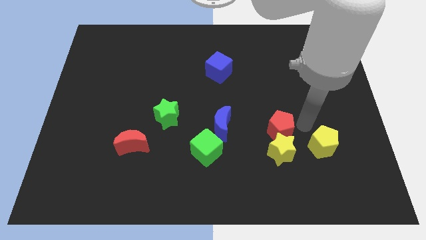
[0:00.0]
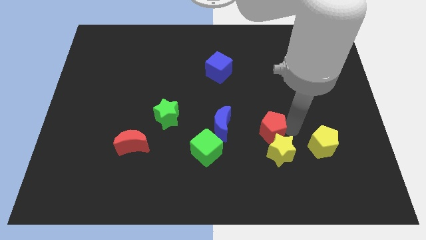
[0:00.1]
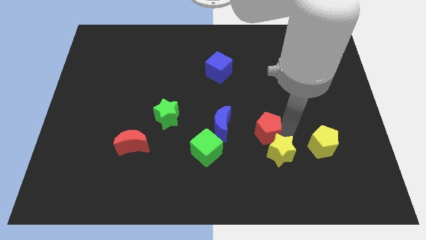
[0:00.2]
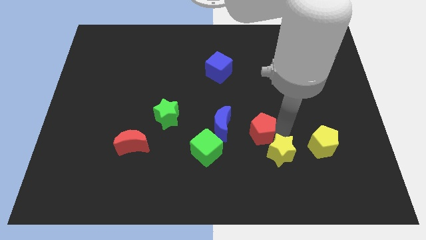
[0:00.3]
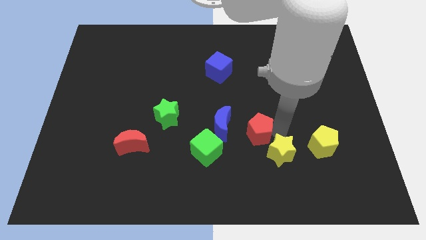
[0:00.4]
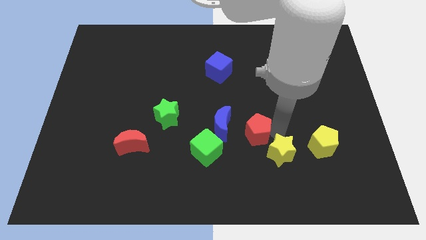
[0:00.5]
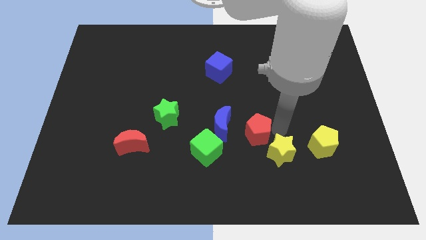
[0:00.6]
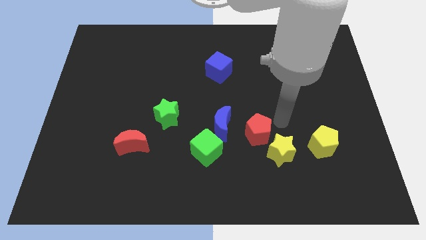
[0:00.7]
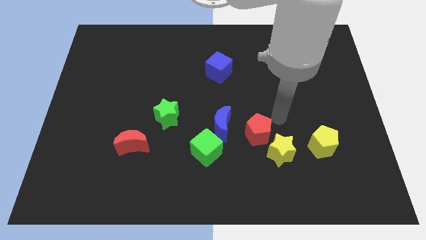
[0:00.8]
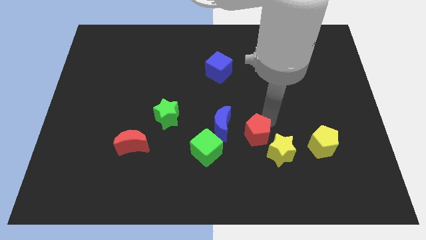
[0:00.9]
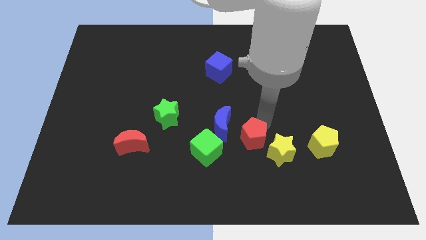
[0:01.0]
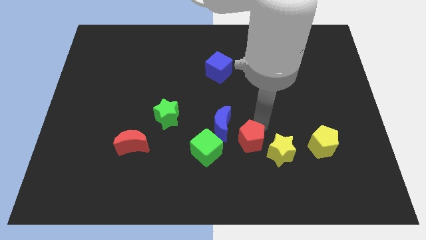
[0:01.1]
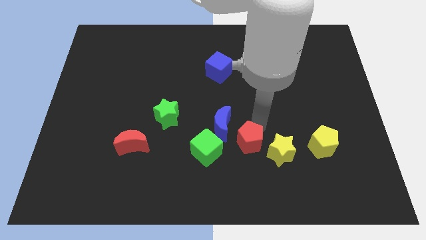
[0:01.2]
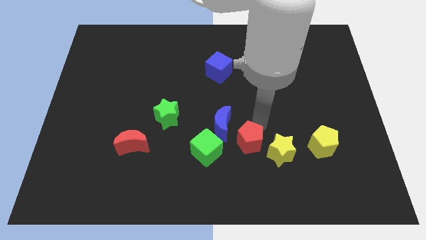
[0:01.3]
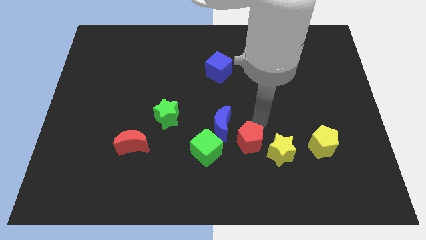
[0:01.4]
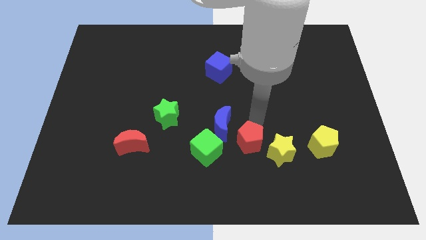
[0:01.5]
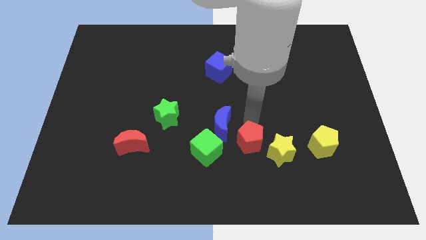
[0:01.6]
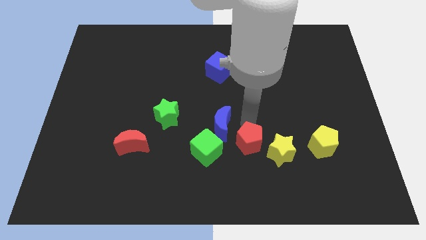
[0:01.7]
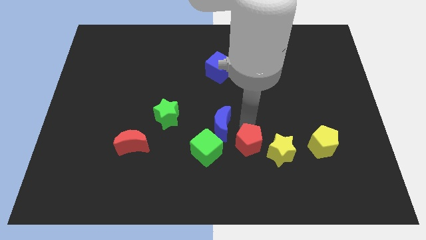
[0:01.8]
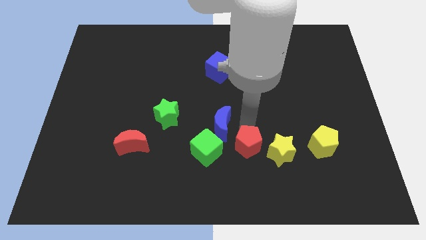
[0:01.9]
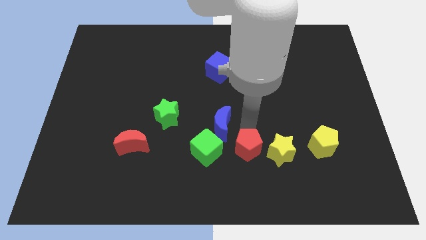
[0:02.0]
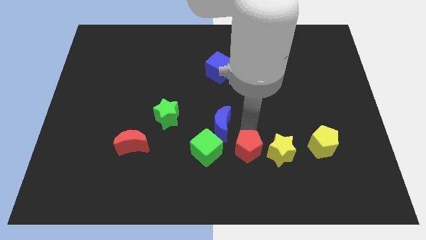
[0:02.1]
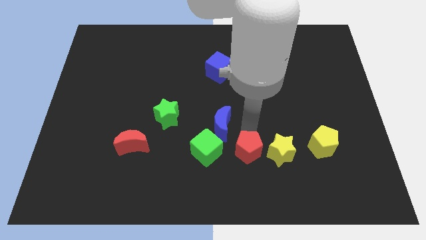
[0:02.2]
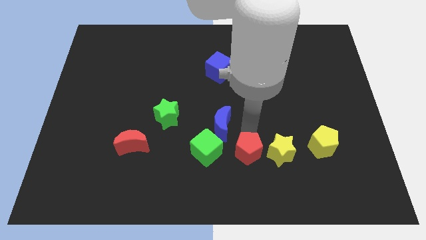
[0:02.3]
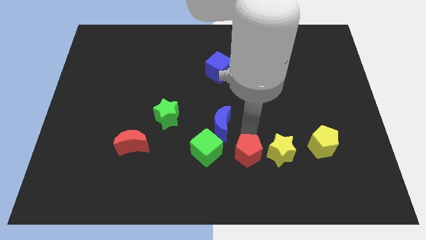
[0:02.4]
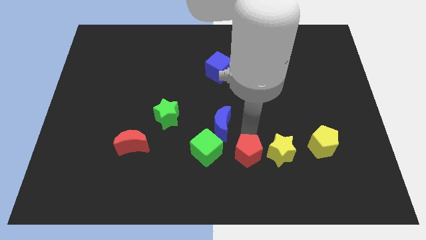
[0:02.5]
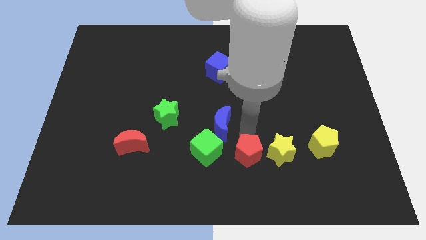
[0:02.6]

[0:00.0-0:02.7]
place the red pentagon to the left of the yellow star

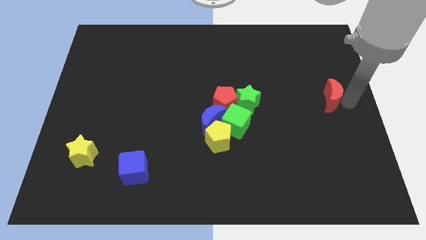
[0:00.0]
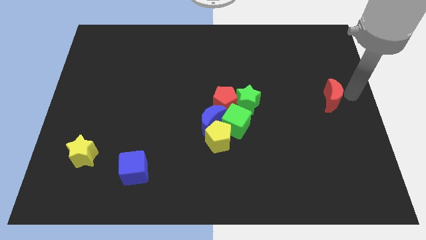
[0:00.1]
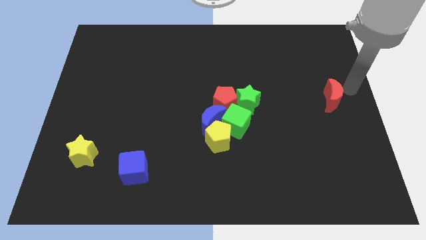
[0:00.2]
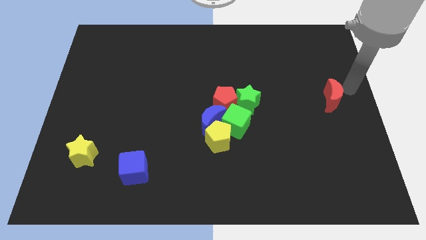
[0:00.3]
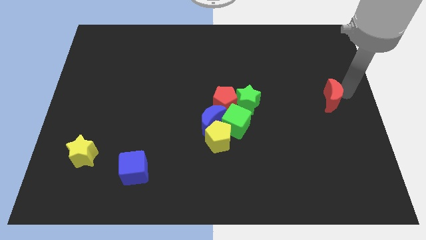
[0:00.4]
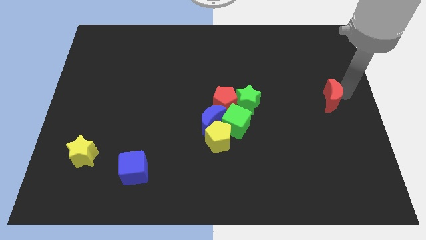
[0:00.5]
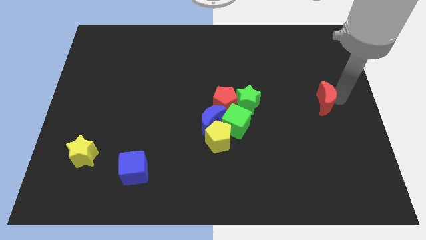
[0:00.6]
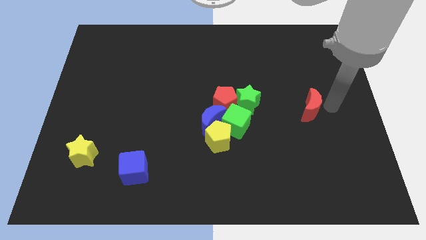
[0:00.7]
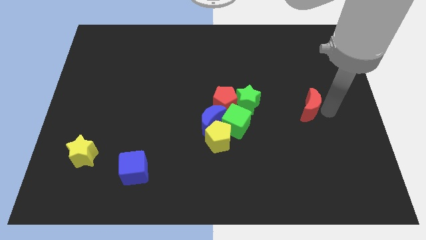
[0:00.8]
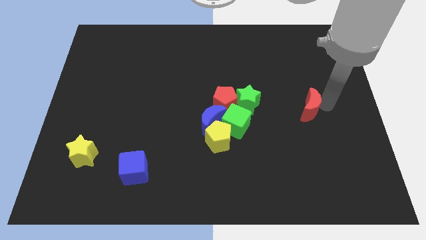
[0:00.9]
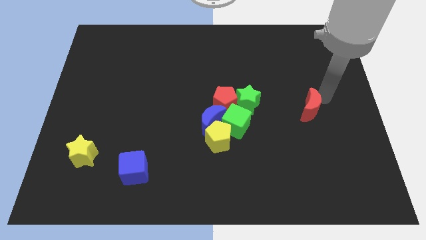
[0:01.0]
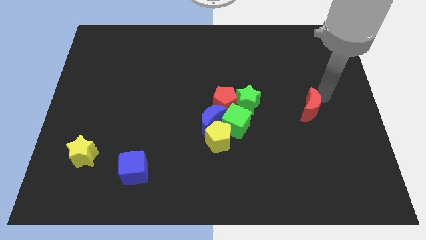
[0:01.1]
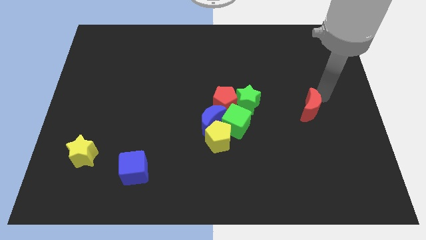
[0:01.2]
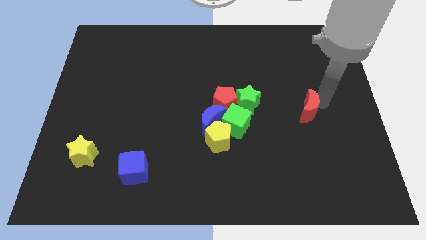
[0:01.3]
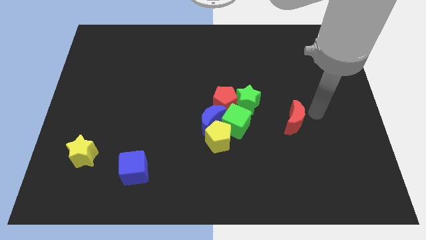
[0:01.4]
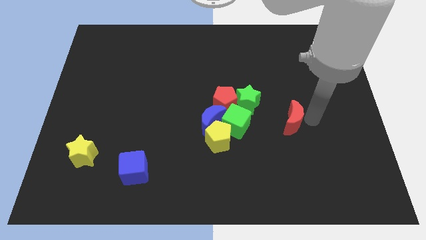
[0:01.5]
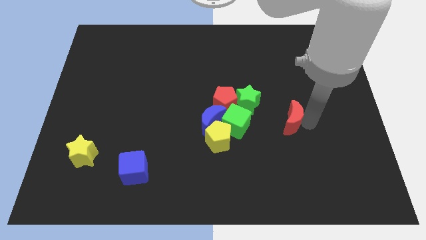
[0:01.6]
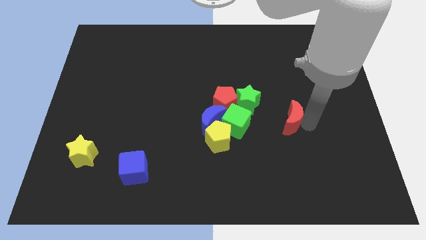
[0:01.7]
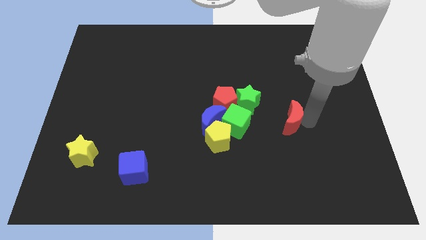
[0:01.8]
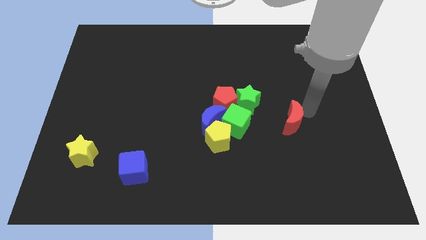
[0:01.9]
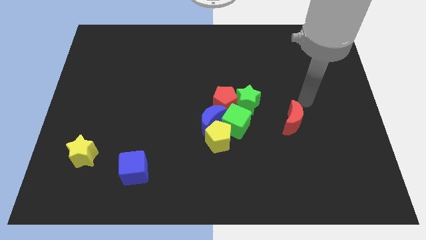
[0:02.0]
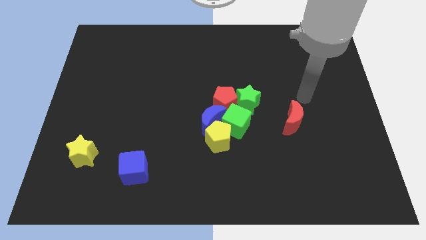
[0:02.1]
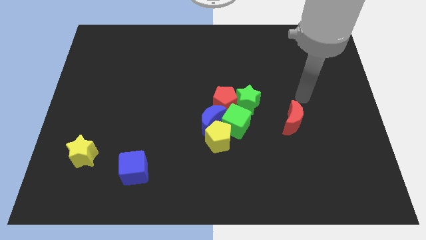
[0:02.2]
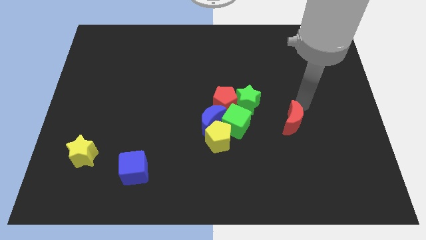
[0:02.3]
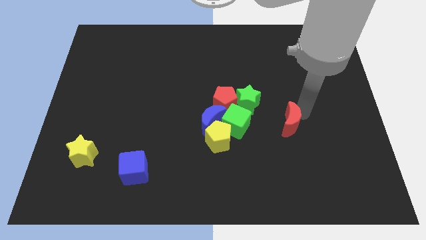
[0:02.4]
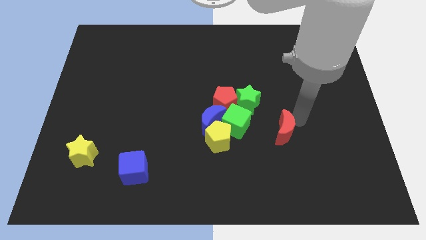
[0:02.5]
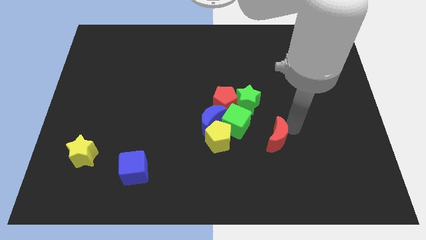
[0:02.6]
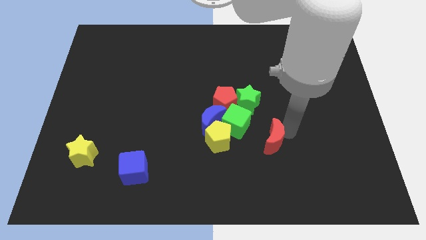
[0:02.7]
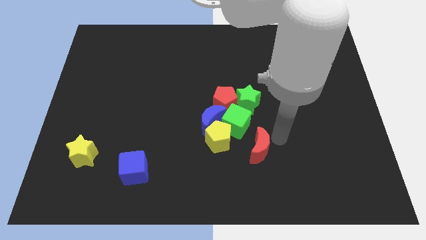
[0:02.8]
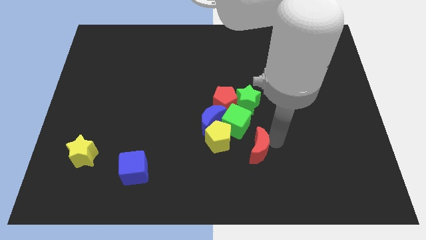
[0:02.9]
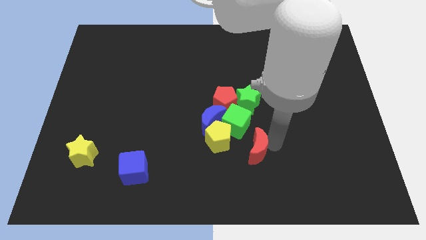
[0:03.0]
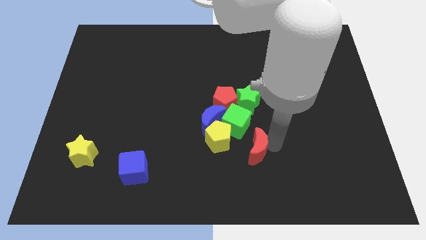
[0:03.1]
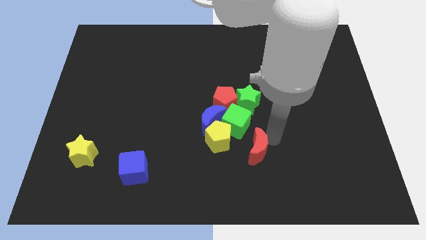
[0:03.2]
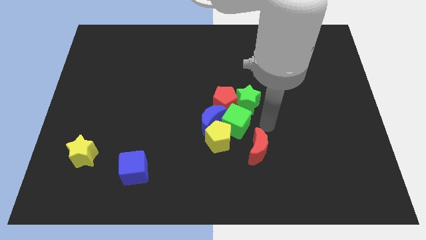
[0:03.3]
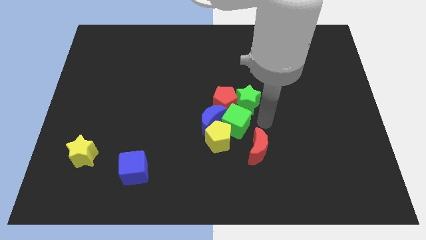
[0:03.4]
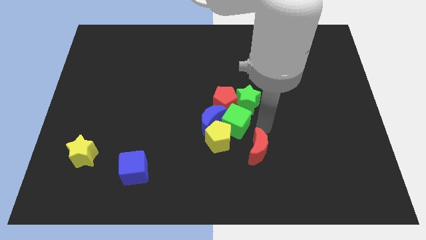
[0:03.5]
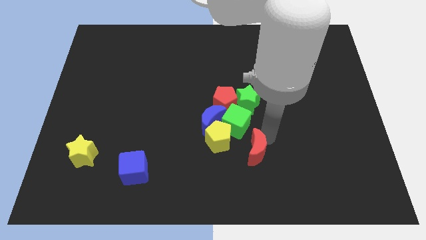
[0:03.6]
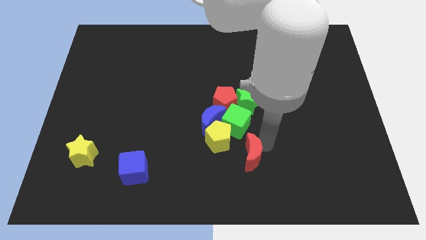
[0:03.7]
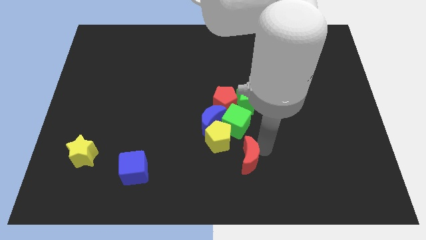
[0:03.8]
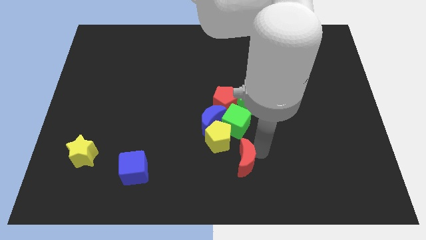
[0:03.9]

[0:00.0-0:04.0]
slide the red moon below the green cube

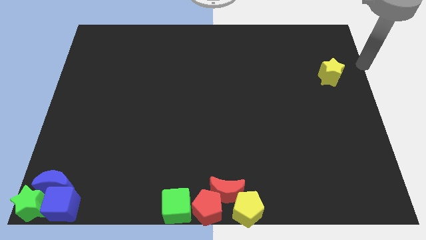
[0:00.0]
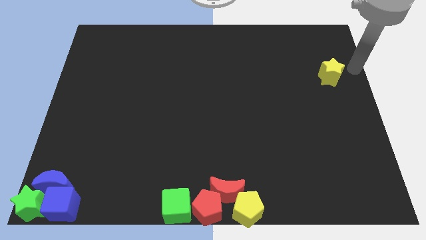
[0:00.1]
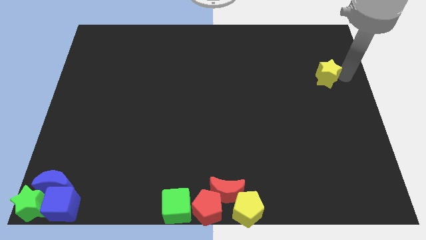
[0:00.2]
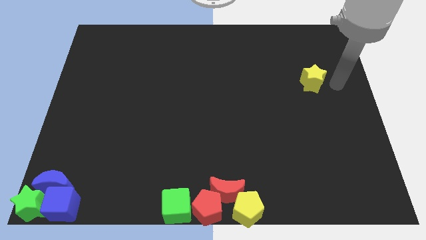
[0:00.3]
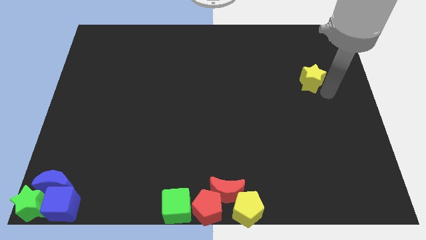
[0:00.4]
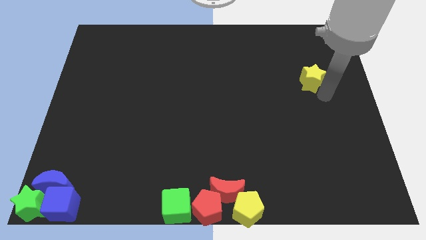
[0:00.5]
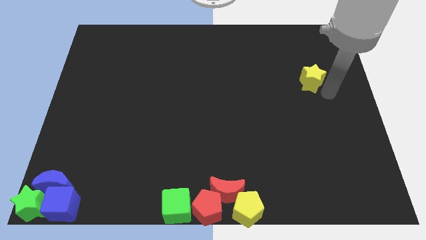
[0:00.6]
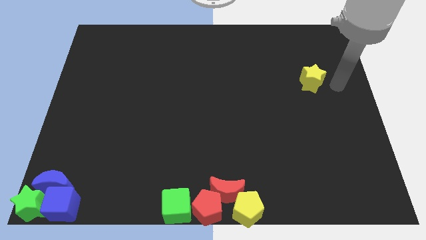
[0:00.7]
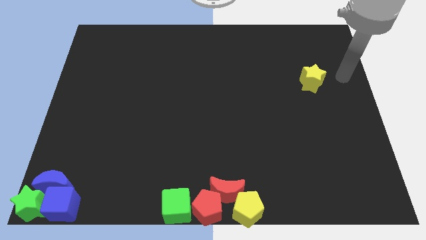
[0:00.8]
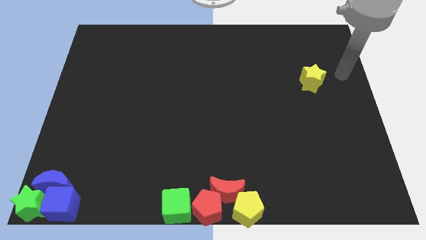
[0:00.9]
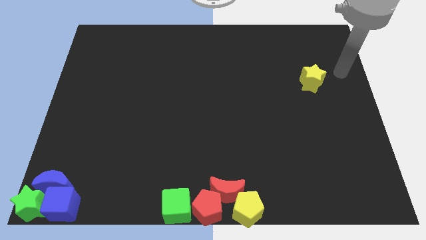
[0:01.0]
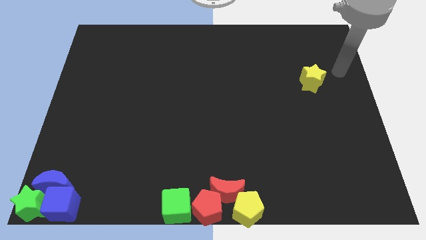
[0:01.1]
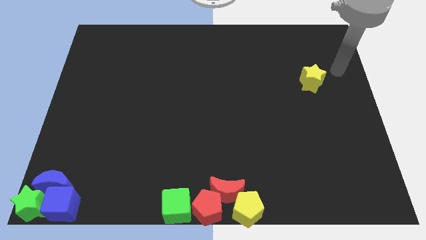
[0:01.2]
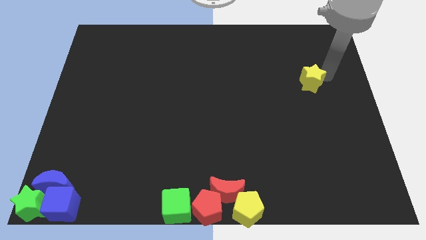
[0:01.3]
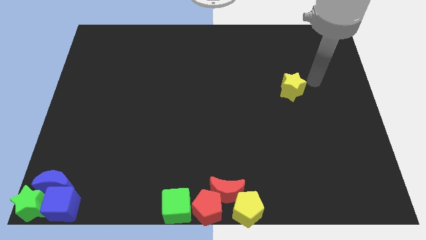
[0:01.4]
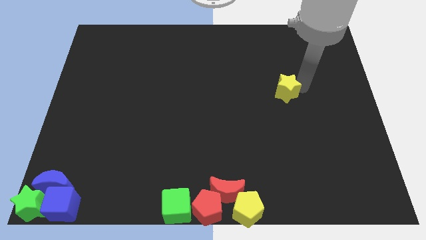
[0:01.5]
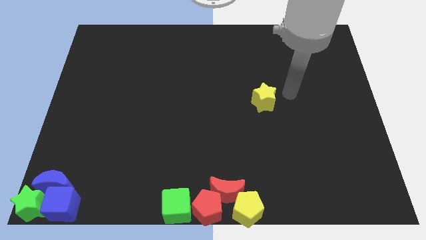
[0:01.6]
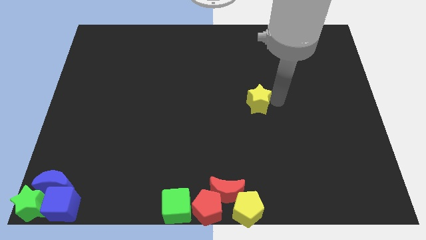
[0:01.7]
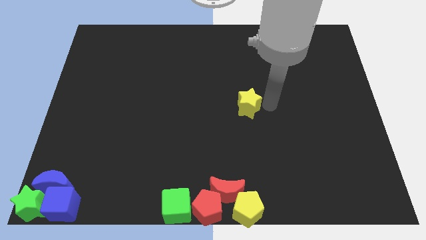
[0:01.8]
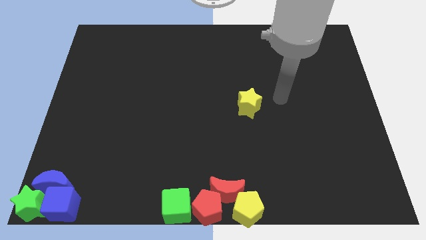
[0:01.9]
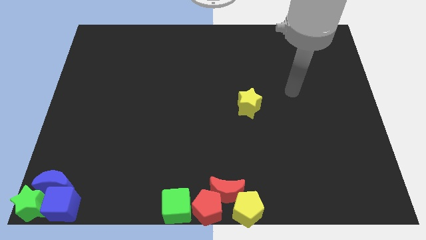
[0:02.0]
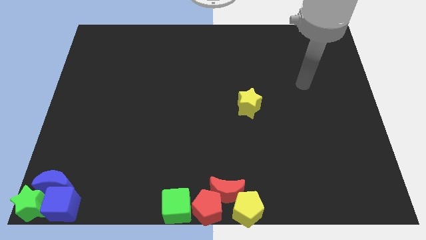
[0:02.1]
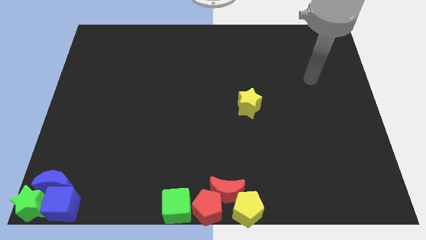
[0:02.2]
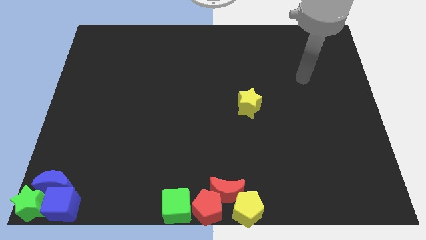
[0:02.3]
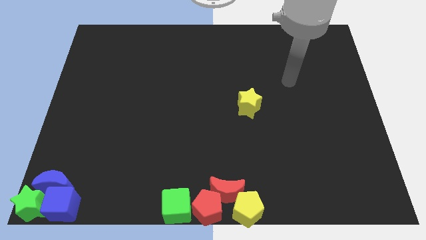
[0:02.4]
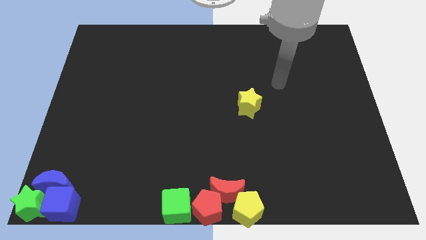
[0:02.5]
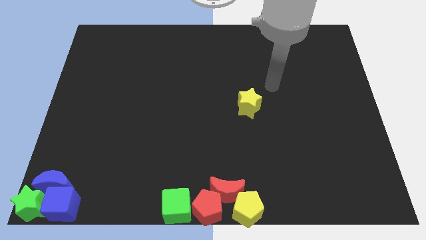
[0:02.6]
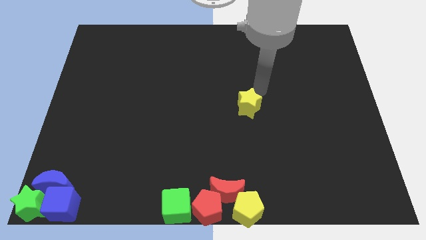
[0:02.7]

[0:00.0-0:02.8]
place the yellow star to the center of the board
